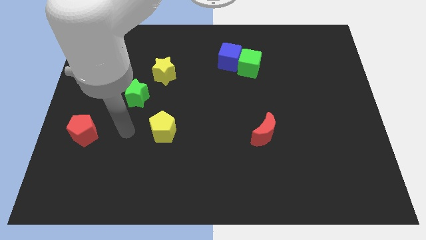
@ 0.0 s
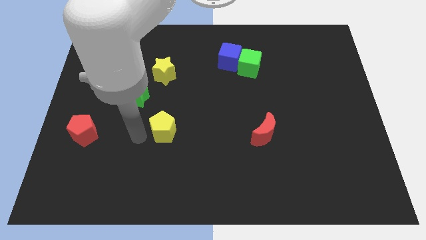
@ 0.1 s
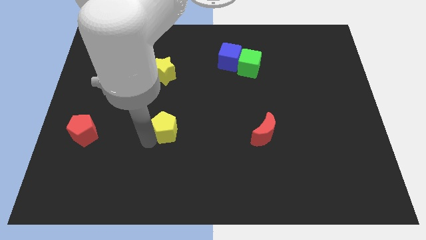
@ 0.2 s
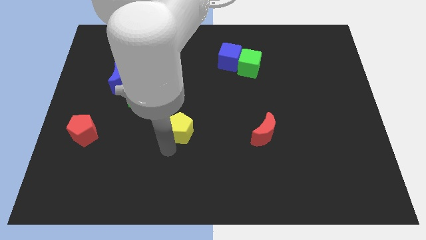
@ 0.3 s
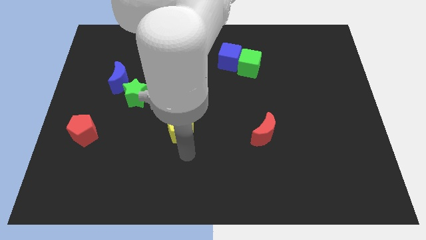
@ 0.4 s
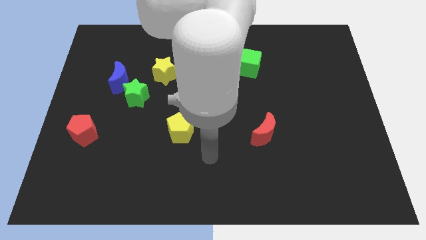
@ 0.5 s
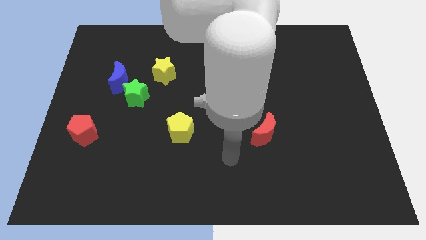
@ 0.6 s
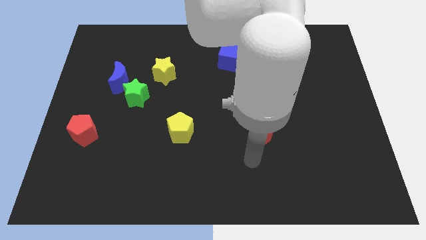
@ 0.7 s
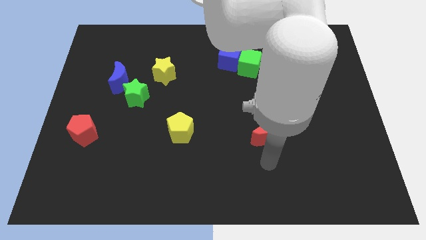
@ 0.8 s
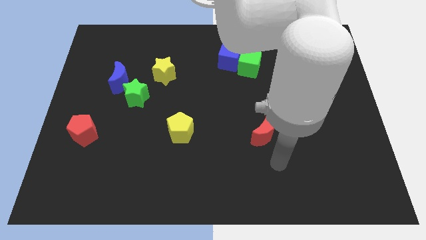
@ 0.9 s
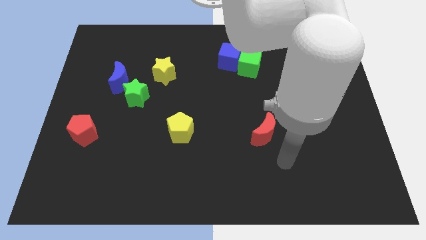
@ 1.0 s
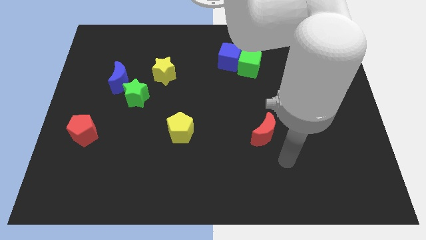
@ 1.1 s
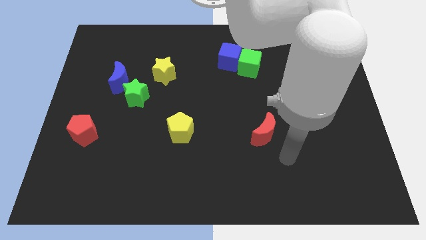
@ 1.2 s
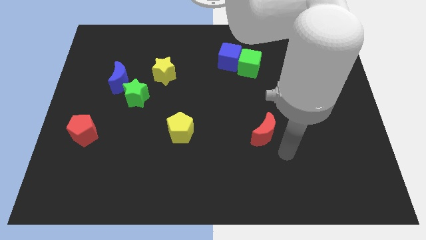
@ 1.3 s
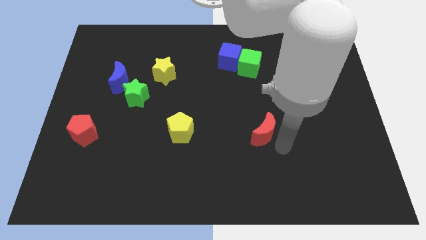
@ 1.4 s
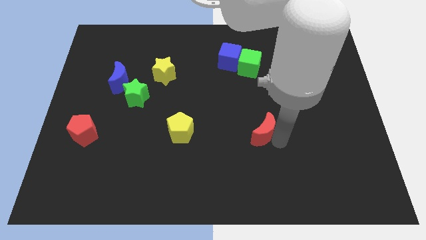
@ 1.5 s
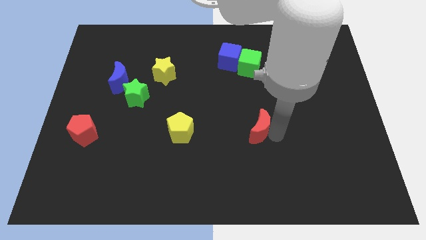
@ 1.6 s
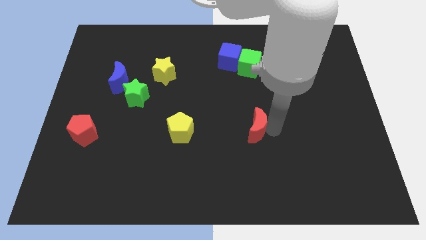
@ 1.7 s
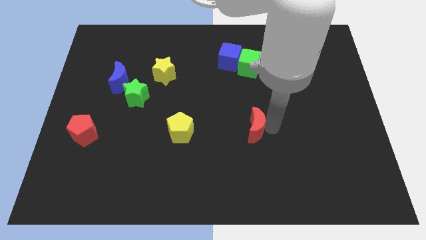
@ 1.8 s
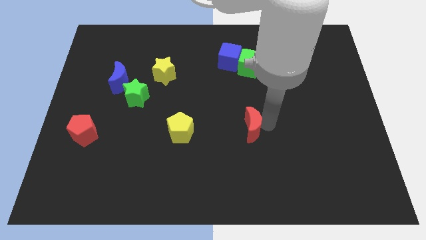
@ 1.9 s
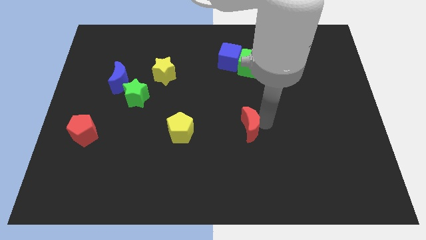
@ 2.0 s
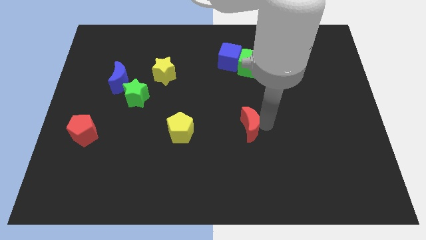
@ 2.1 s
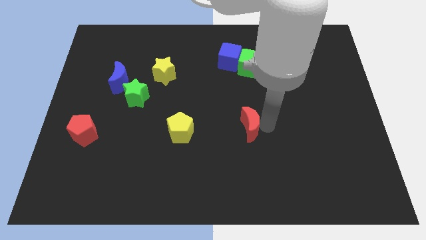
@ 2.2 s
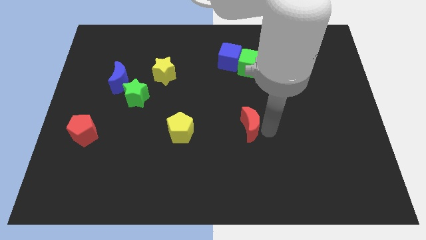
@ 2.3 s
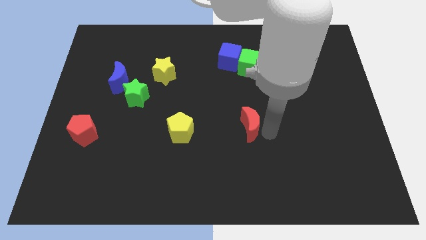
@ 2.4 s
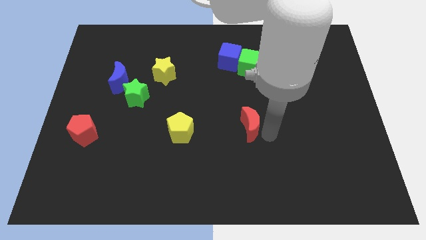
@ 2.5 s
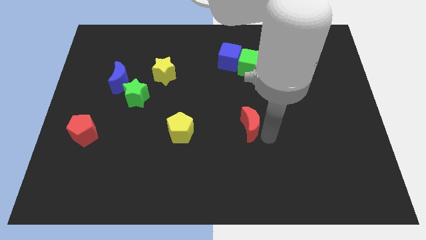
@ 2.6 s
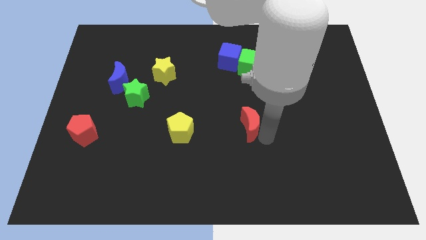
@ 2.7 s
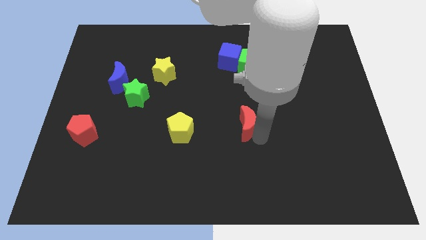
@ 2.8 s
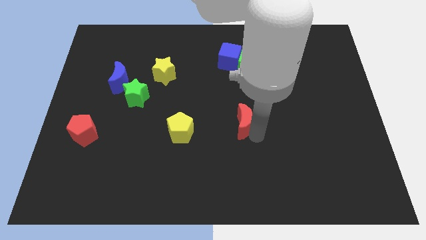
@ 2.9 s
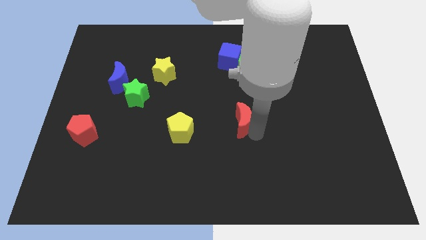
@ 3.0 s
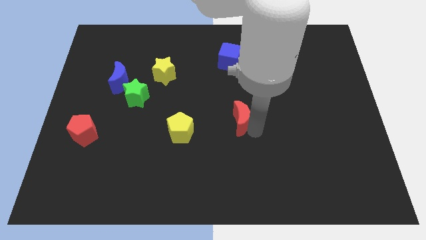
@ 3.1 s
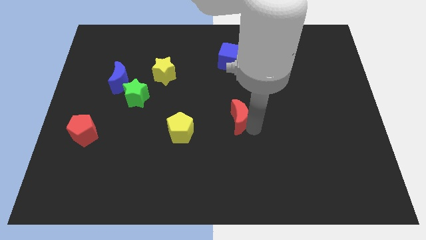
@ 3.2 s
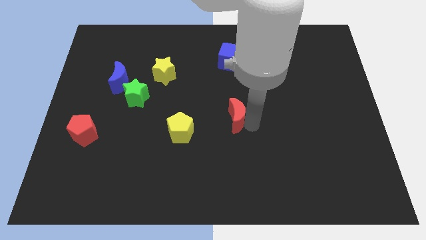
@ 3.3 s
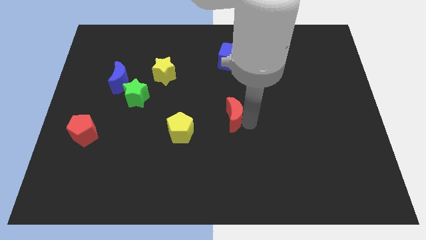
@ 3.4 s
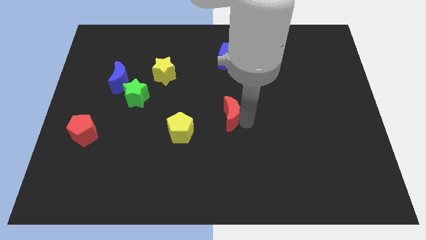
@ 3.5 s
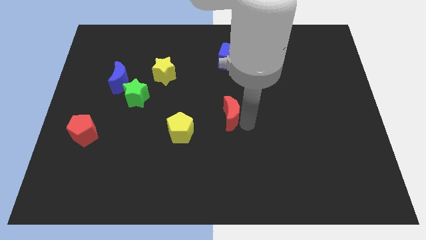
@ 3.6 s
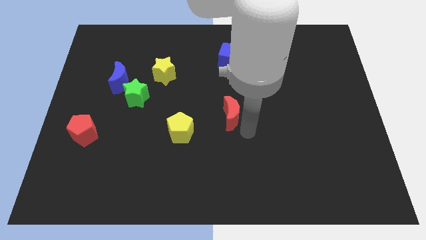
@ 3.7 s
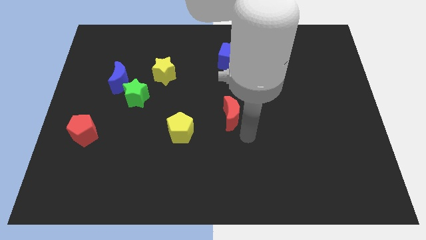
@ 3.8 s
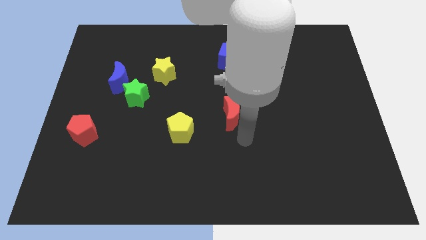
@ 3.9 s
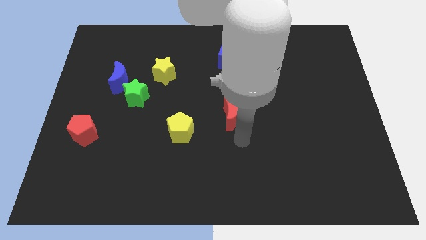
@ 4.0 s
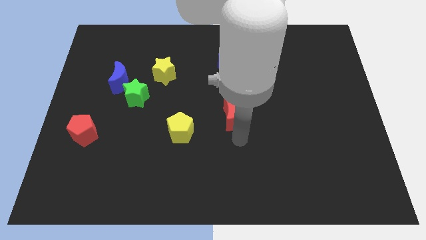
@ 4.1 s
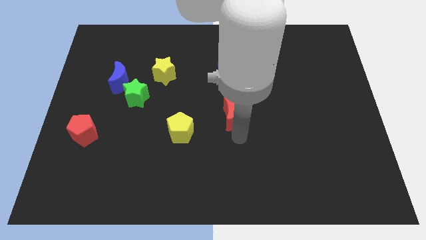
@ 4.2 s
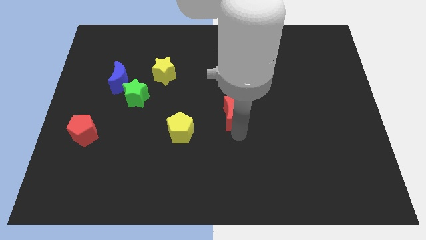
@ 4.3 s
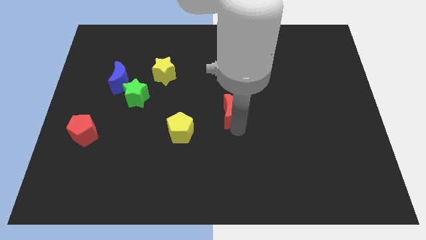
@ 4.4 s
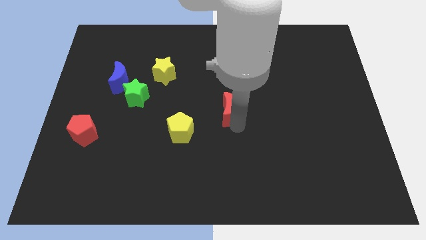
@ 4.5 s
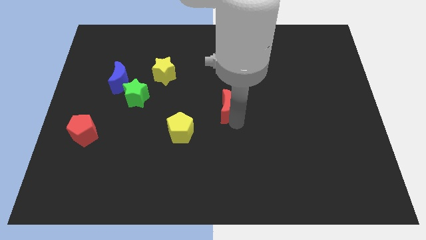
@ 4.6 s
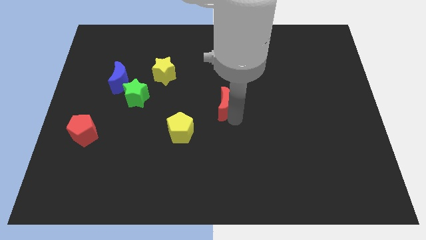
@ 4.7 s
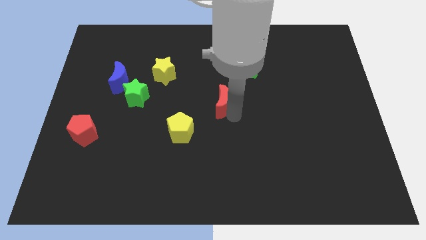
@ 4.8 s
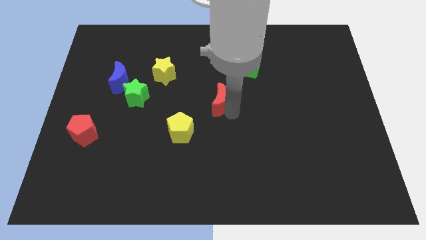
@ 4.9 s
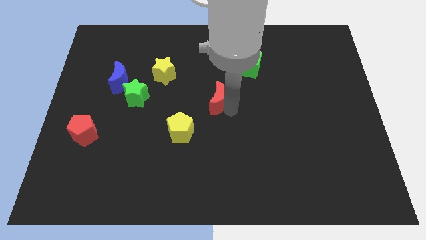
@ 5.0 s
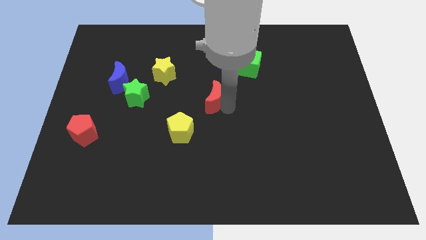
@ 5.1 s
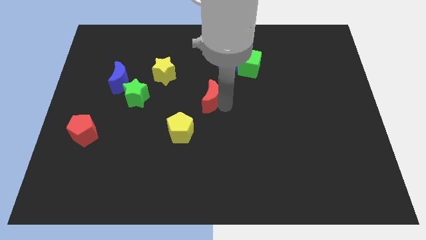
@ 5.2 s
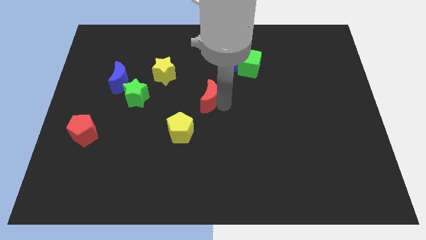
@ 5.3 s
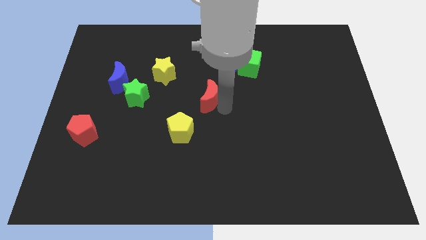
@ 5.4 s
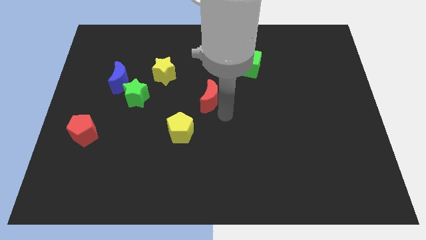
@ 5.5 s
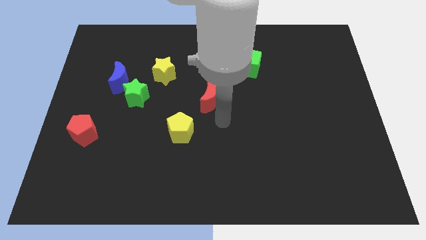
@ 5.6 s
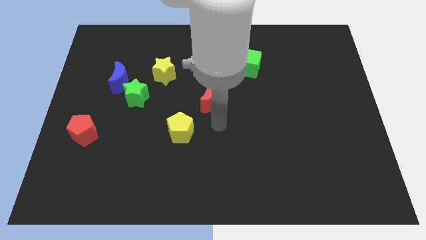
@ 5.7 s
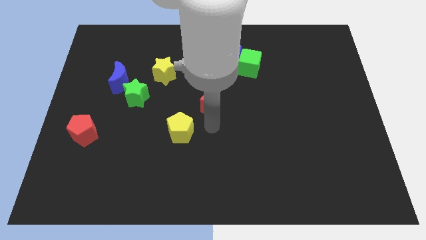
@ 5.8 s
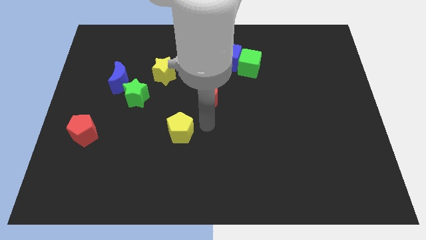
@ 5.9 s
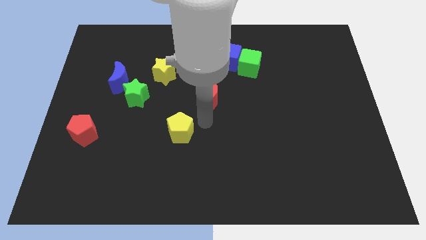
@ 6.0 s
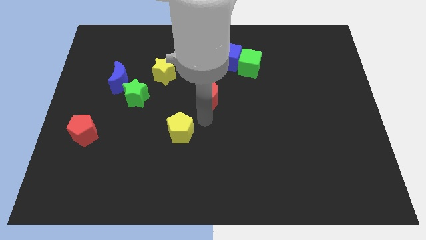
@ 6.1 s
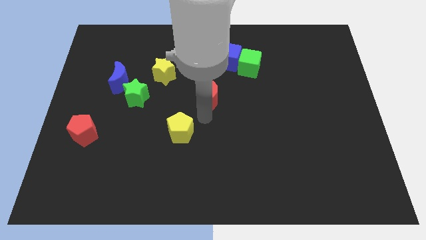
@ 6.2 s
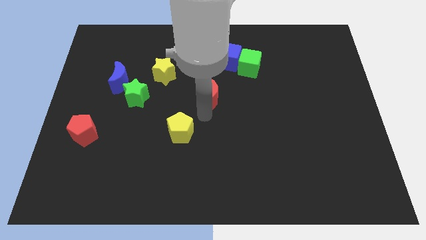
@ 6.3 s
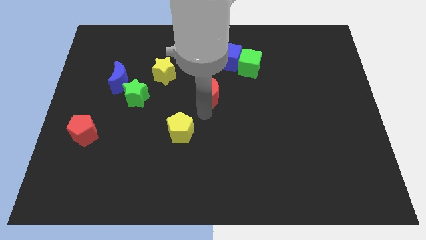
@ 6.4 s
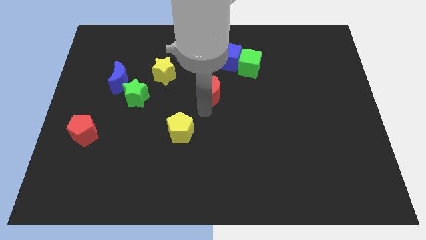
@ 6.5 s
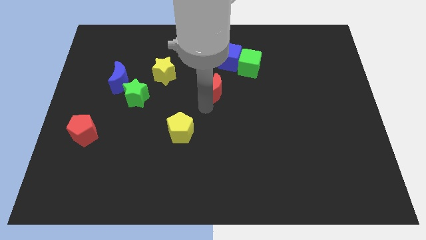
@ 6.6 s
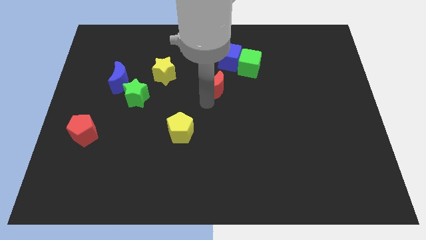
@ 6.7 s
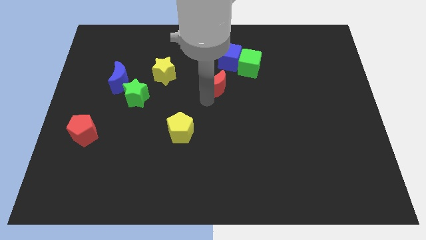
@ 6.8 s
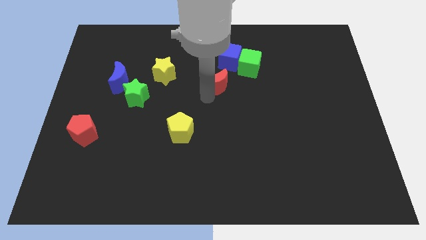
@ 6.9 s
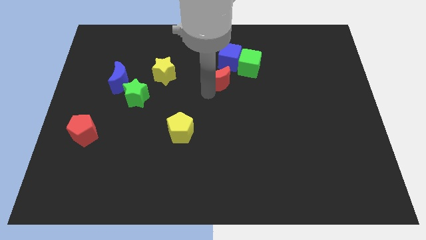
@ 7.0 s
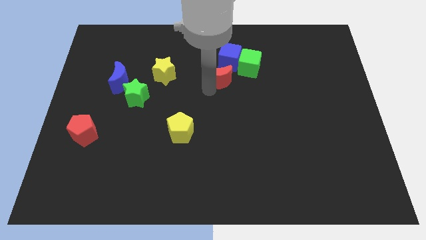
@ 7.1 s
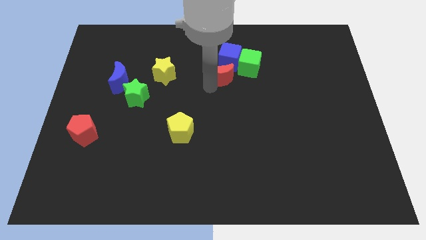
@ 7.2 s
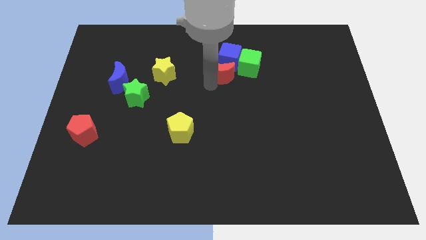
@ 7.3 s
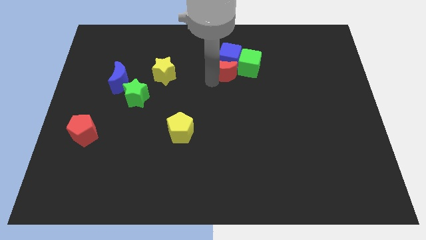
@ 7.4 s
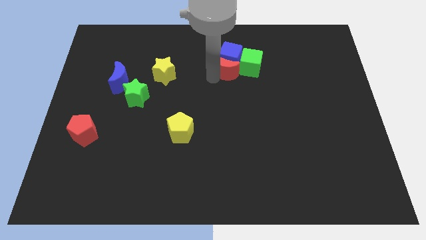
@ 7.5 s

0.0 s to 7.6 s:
push the red moon towards the blue cube

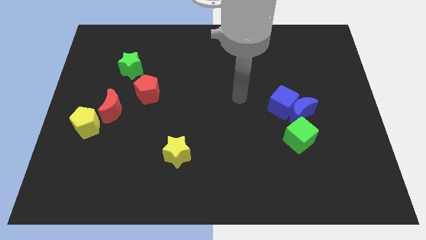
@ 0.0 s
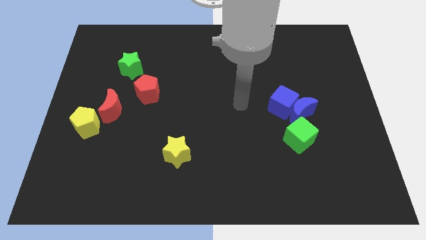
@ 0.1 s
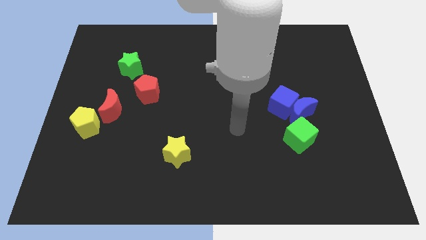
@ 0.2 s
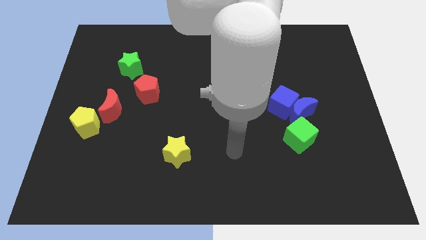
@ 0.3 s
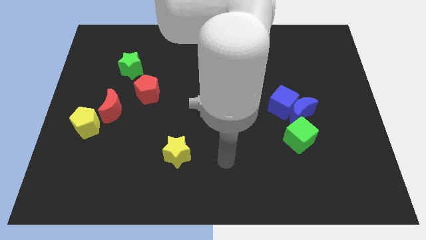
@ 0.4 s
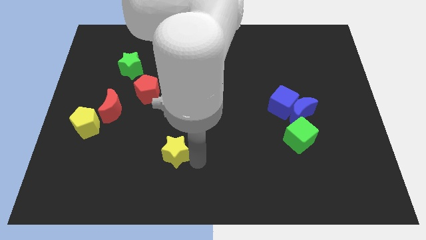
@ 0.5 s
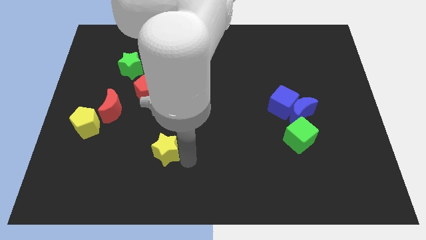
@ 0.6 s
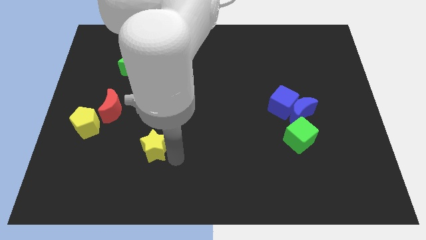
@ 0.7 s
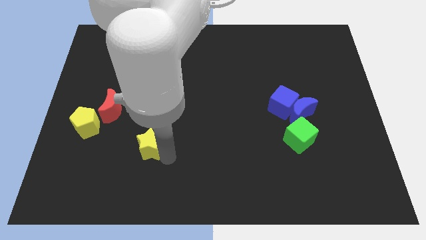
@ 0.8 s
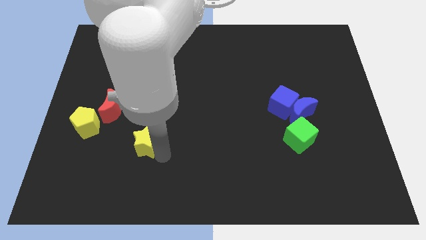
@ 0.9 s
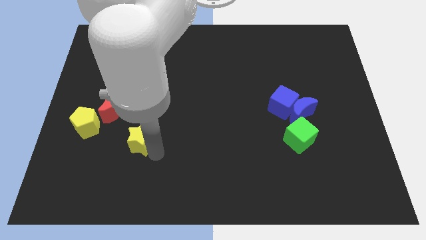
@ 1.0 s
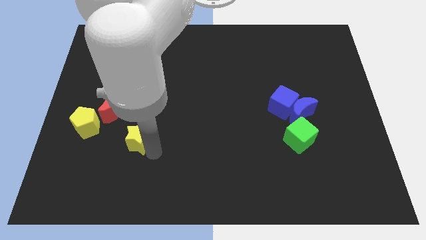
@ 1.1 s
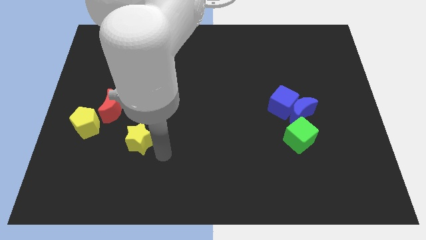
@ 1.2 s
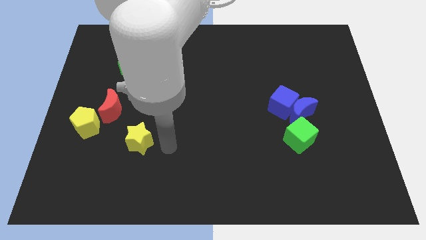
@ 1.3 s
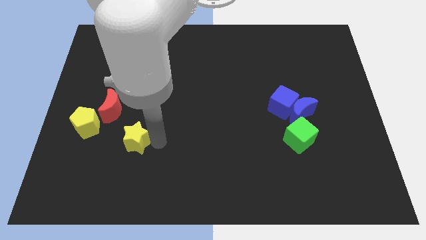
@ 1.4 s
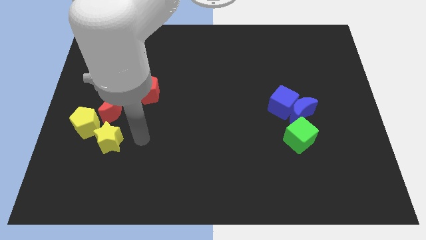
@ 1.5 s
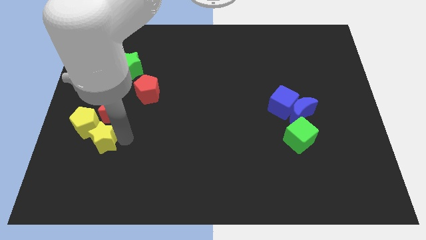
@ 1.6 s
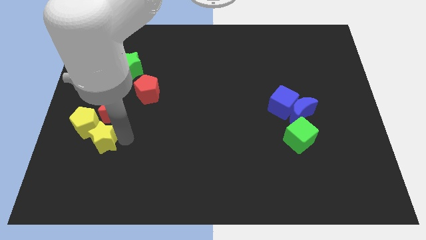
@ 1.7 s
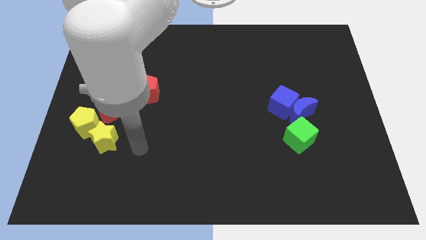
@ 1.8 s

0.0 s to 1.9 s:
slide the yellow star towards the yellow pentagon
